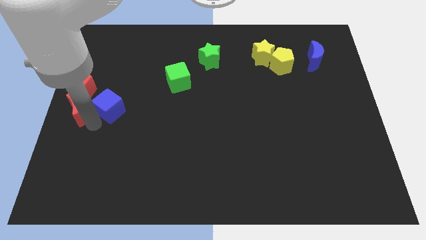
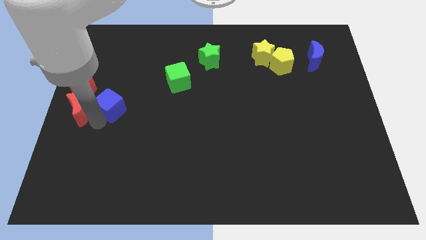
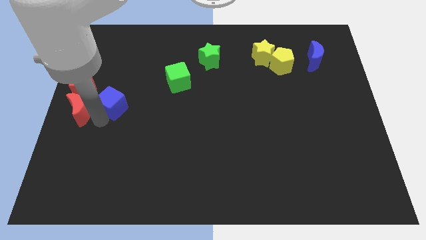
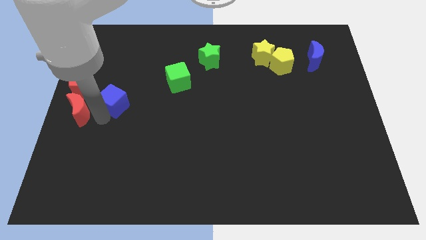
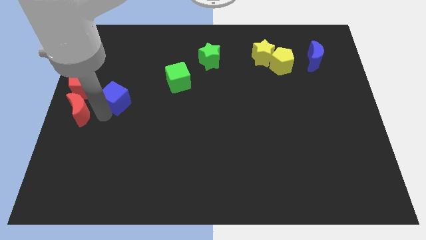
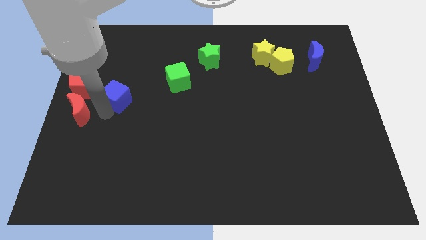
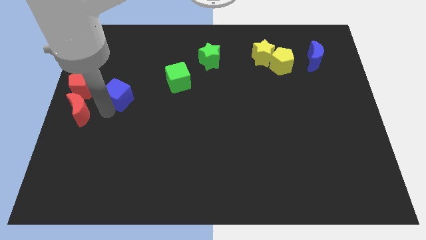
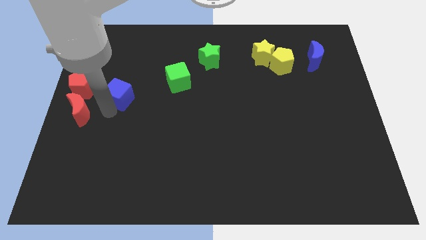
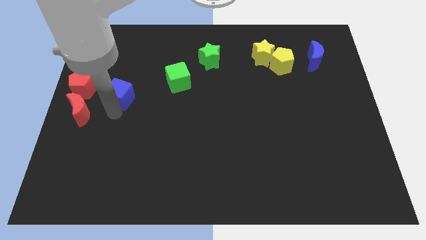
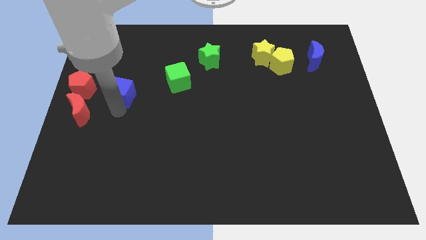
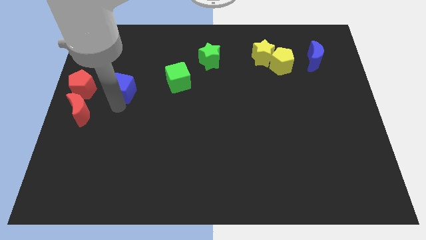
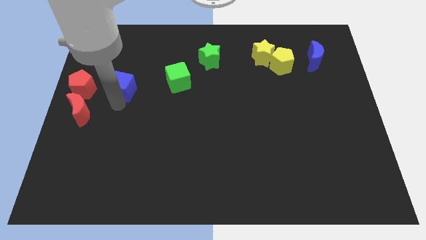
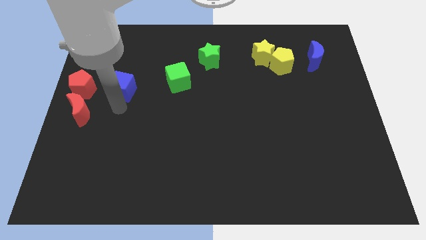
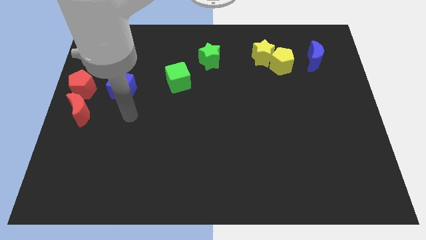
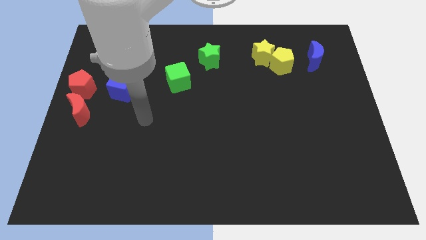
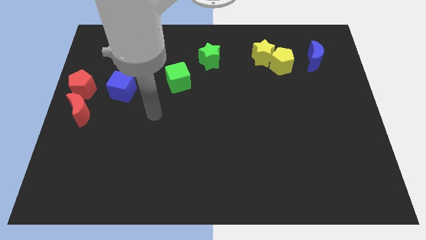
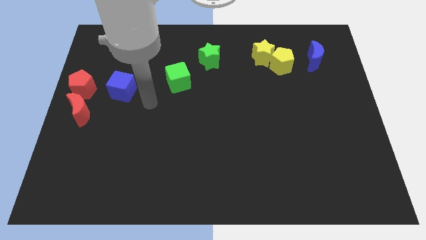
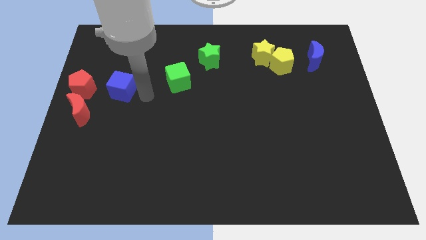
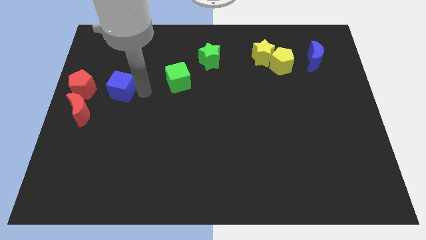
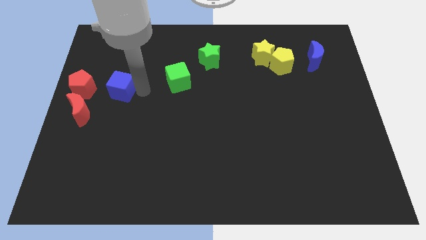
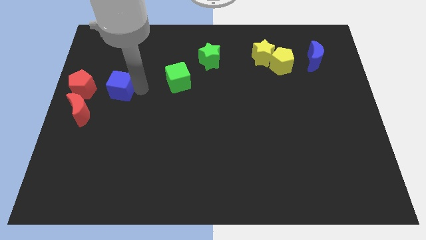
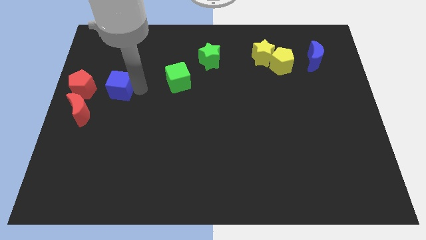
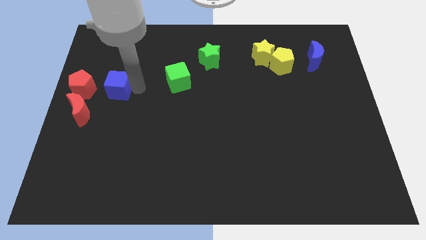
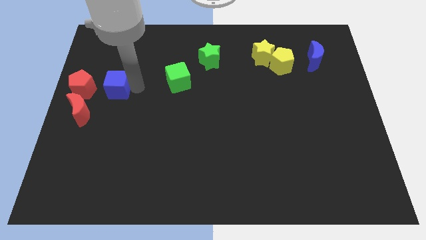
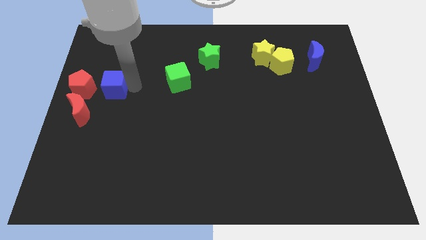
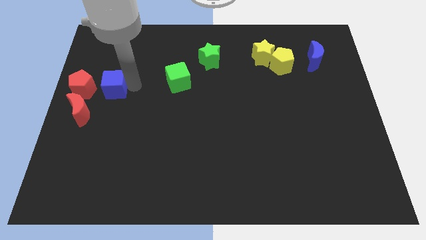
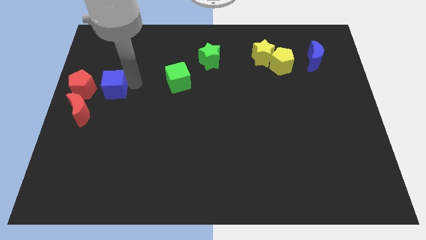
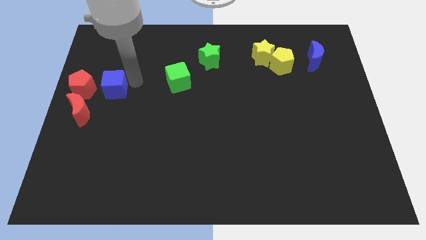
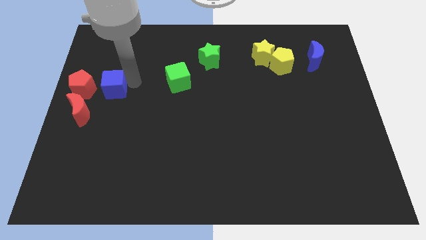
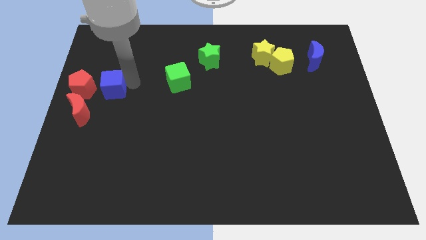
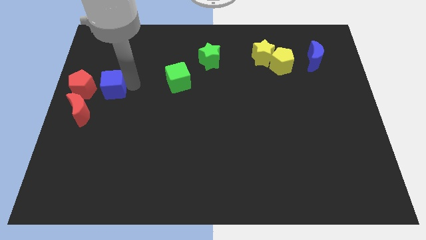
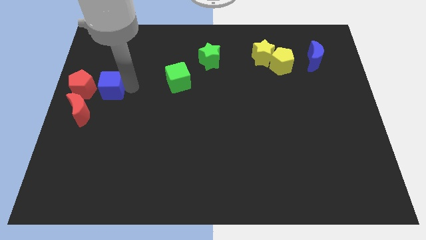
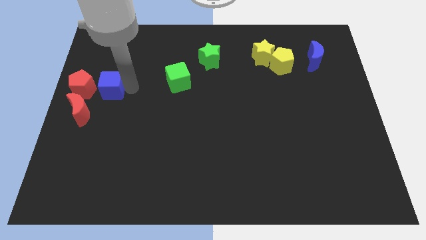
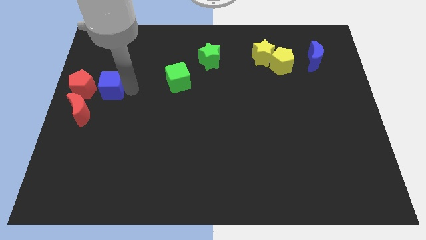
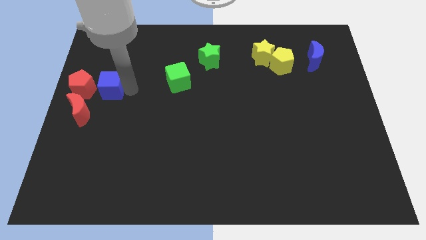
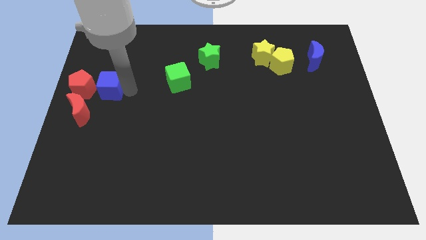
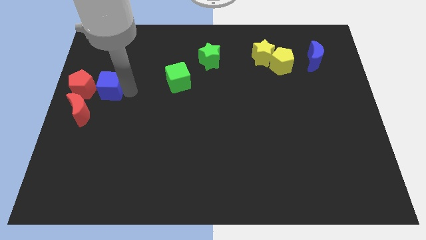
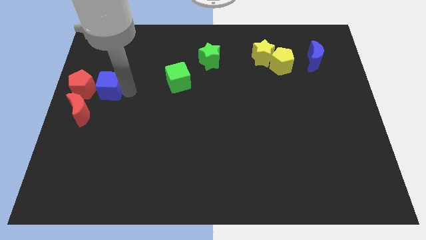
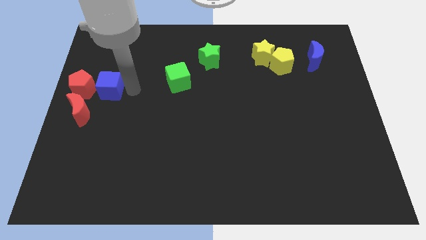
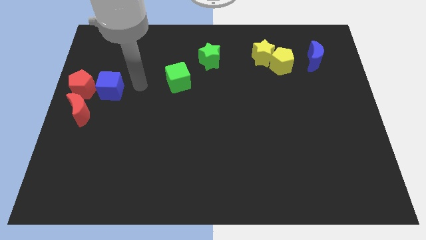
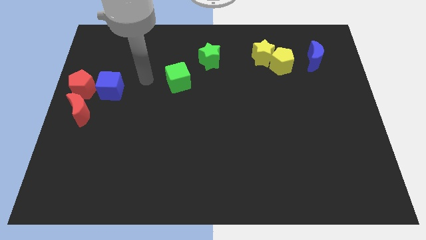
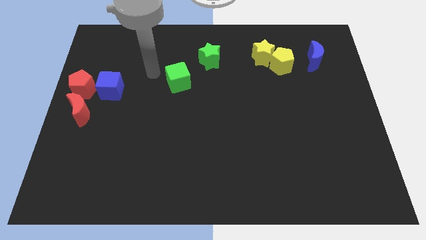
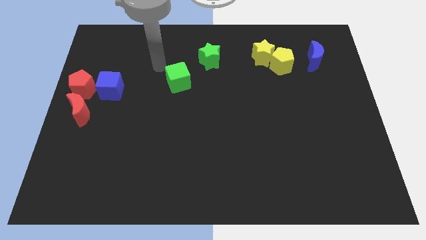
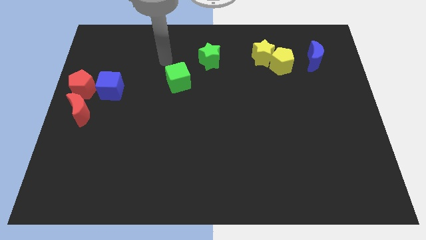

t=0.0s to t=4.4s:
place the blue cube to the right of the red pentagon

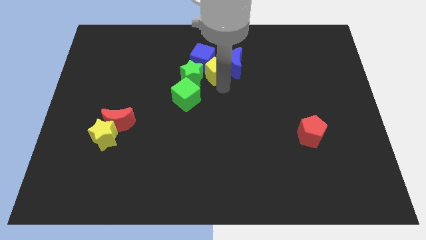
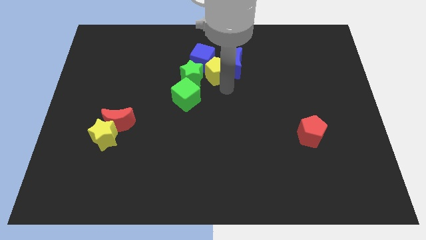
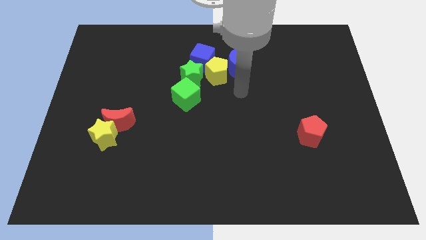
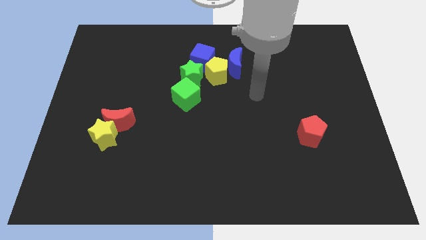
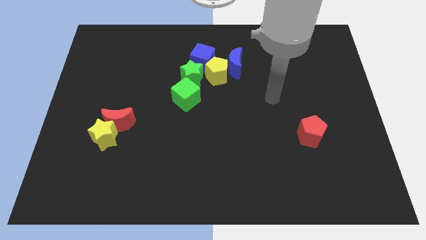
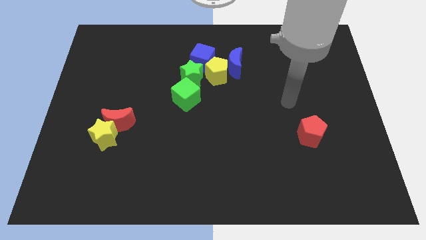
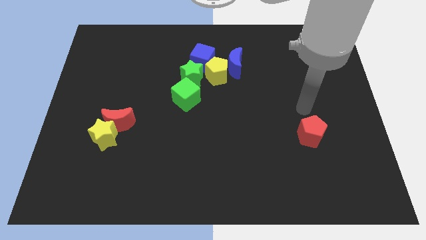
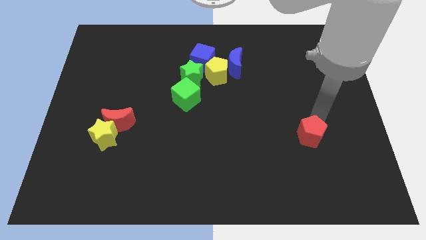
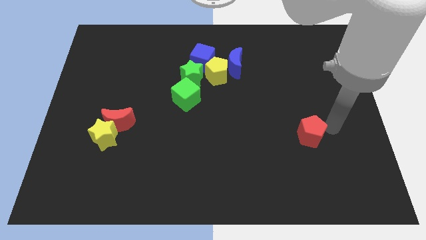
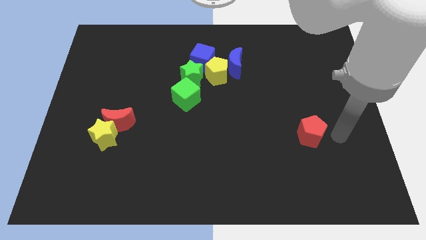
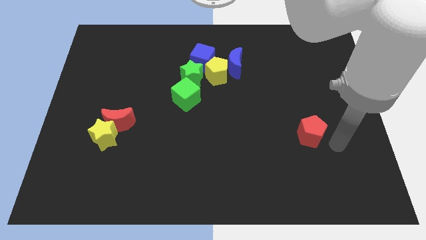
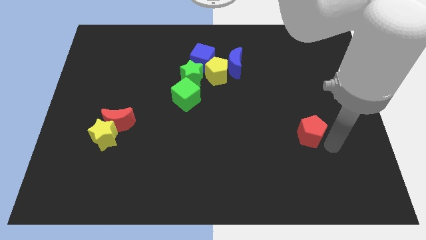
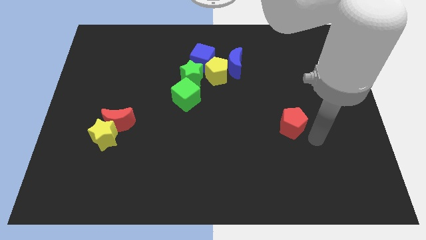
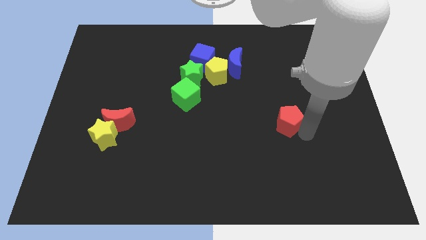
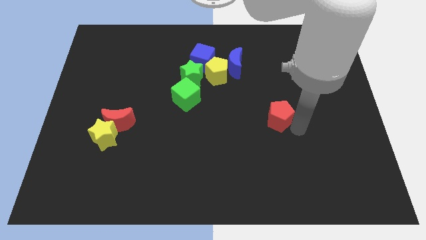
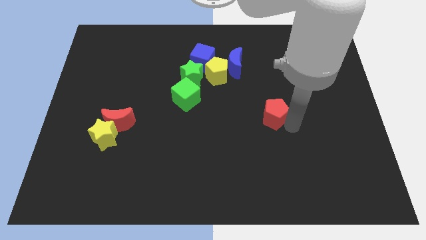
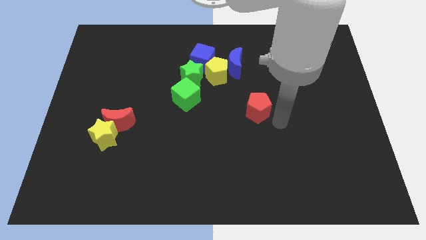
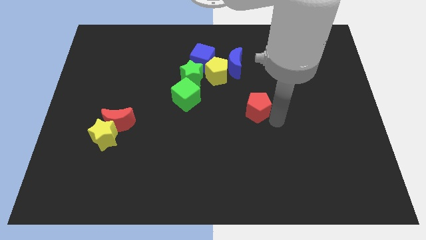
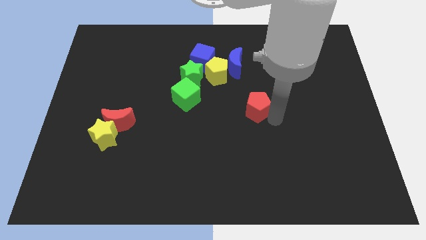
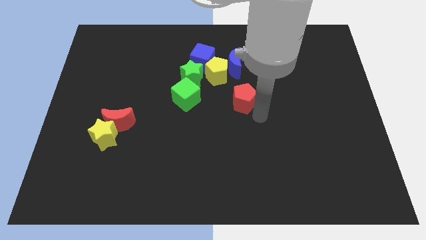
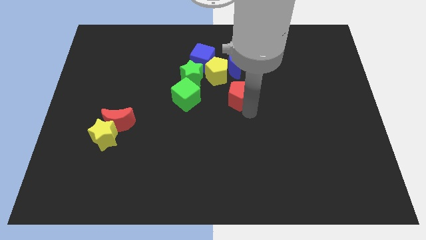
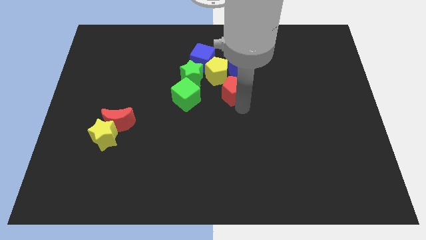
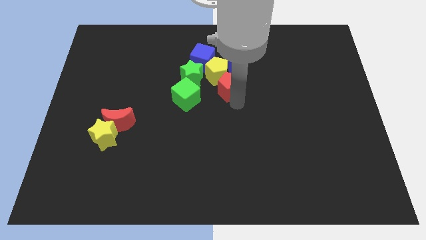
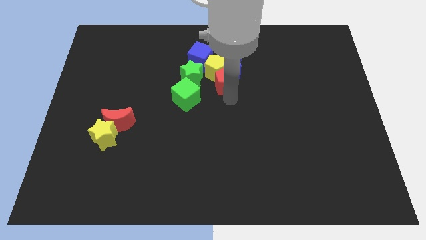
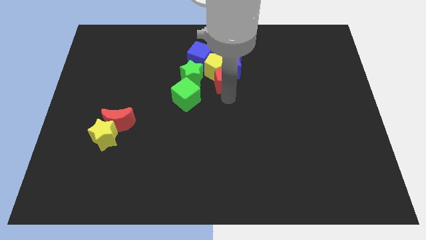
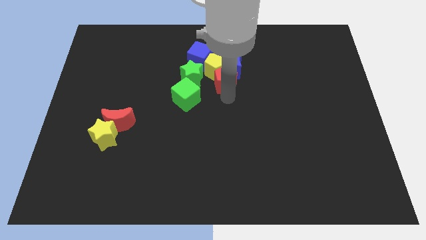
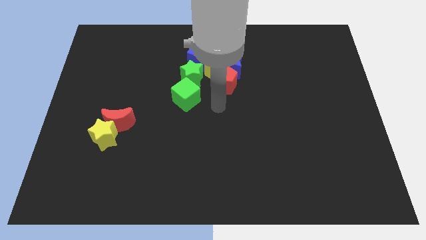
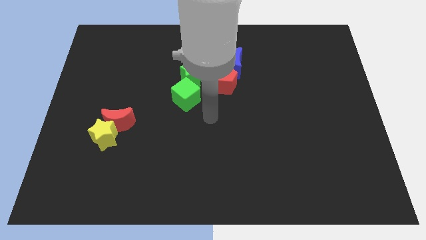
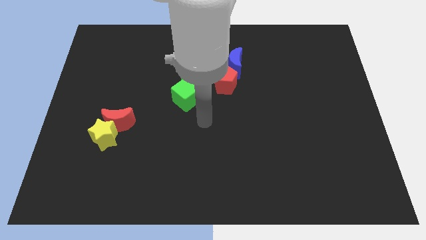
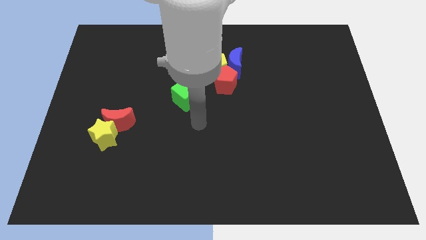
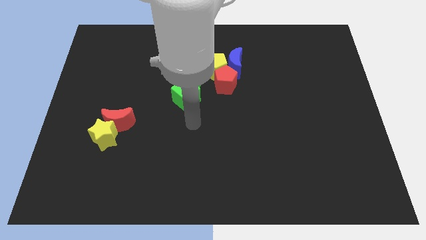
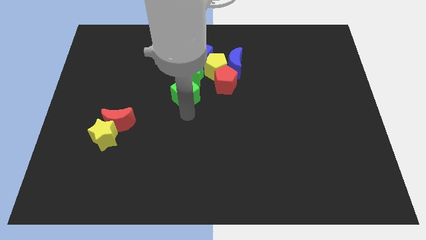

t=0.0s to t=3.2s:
push the red pentagon into yellow pentagon

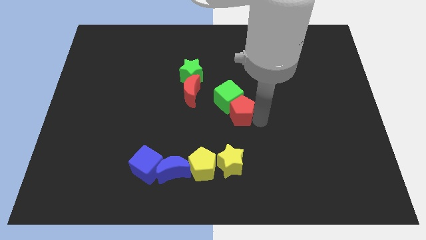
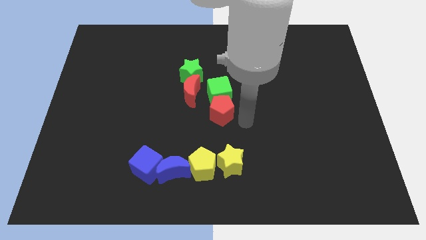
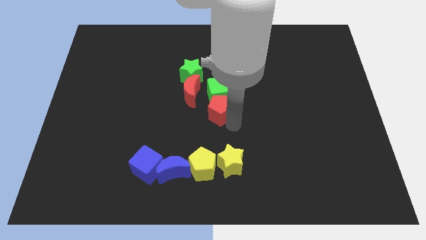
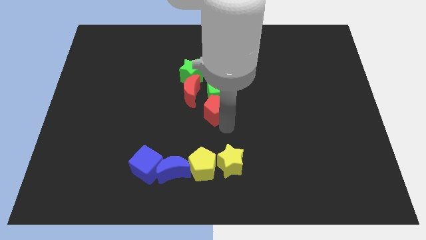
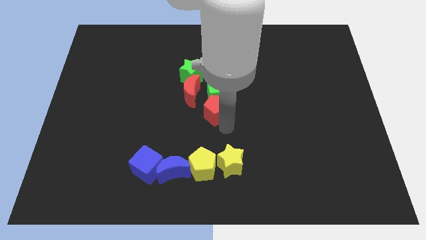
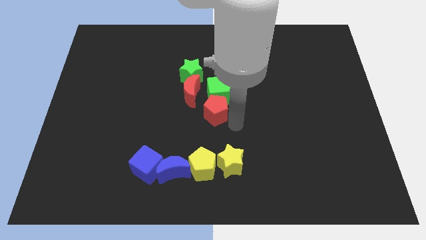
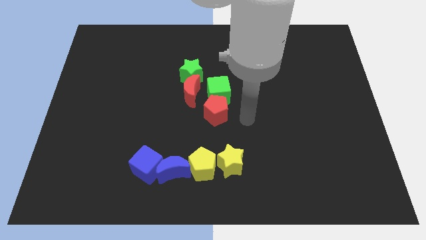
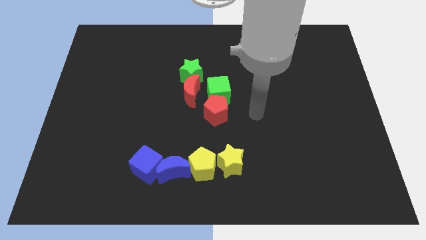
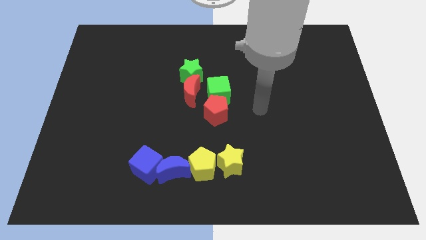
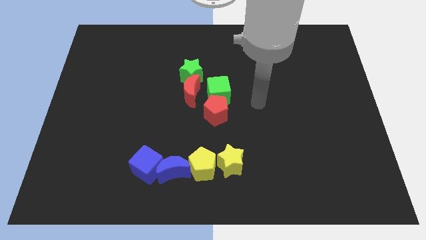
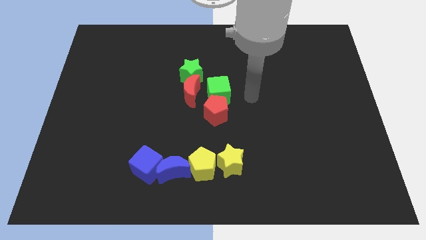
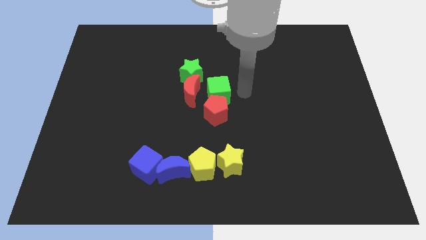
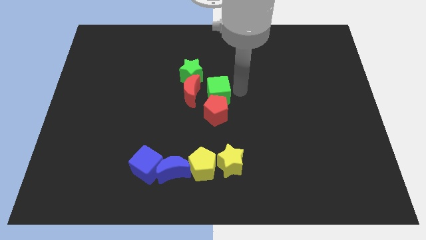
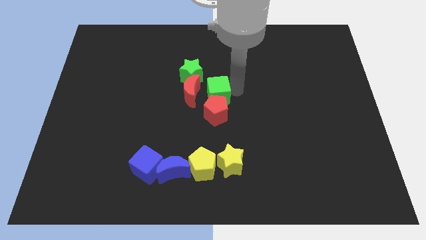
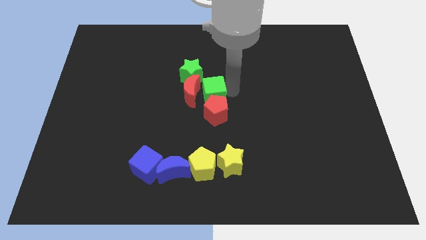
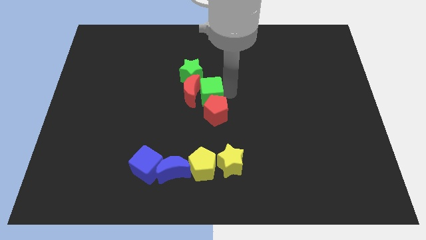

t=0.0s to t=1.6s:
place the green cube towards the right side of the red moon
